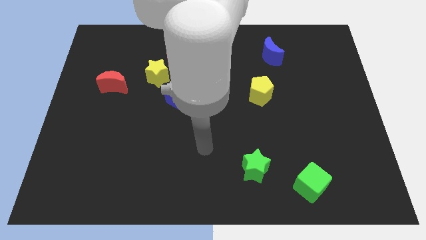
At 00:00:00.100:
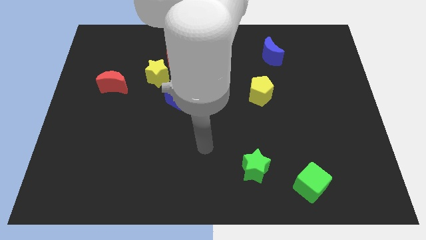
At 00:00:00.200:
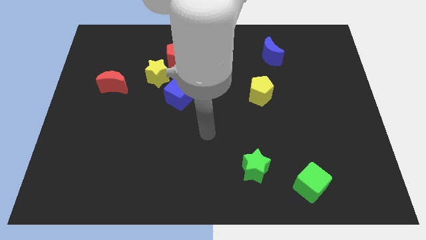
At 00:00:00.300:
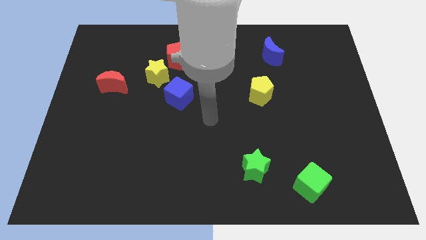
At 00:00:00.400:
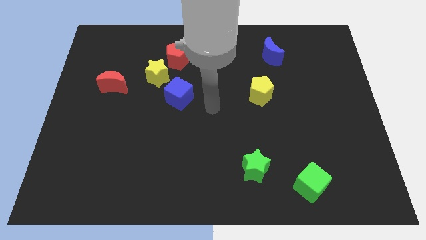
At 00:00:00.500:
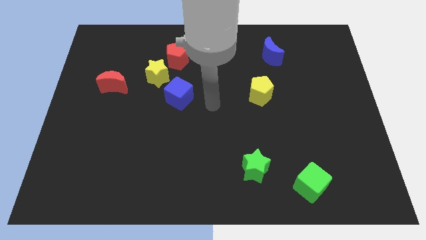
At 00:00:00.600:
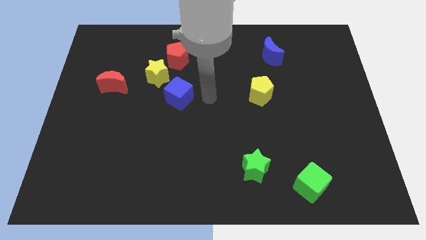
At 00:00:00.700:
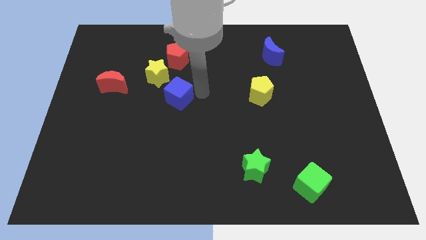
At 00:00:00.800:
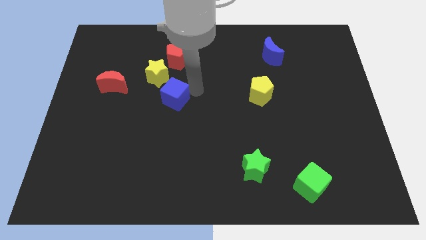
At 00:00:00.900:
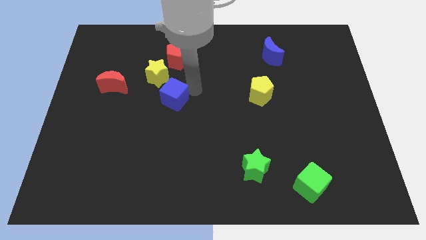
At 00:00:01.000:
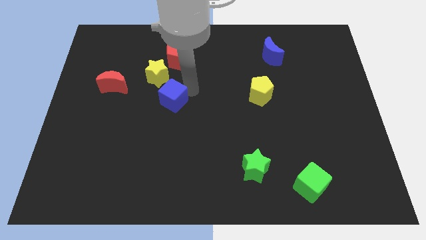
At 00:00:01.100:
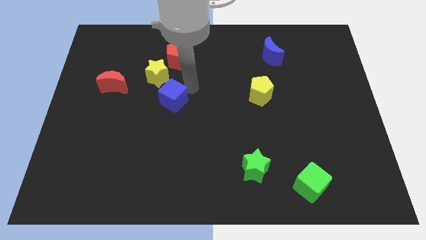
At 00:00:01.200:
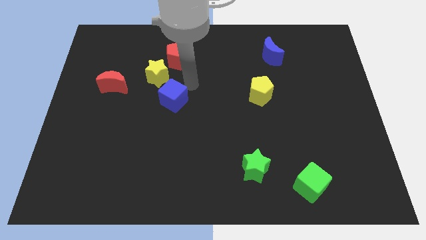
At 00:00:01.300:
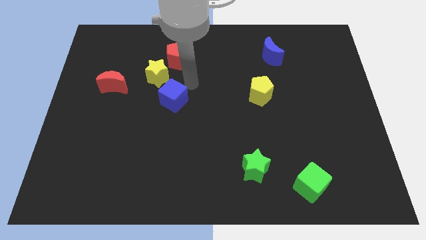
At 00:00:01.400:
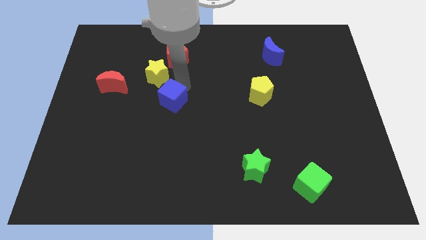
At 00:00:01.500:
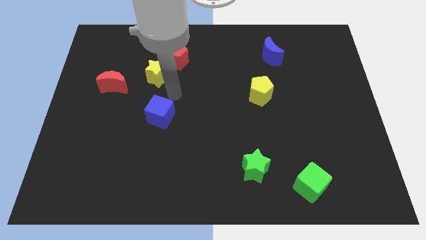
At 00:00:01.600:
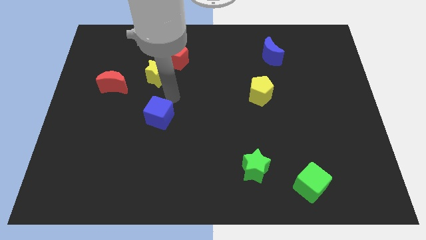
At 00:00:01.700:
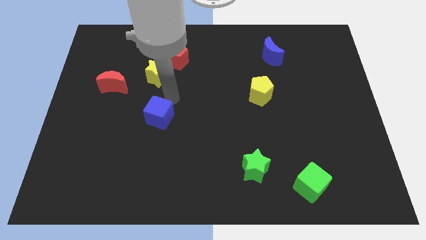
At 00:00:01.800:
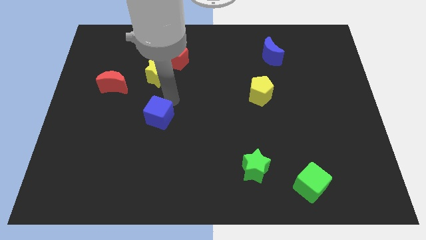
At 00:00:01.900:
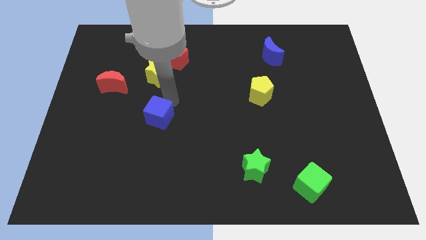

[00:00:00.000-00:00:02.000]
slightly push the blue cube

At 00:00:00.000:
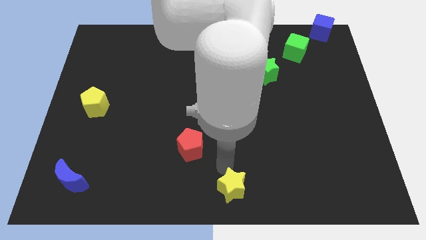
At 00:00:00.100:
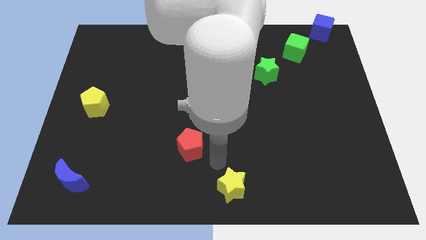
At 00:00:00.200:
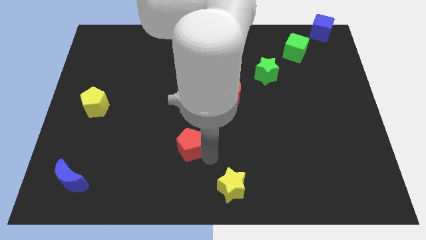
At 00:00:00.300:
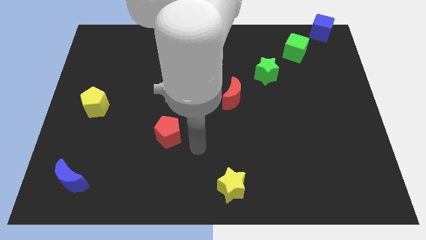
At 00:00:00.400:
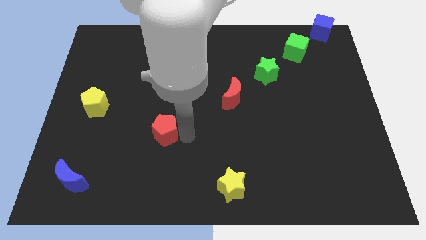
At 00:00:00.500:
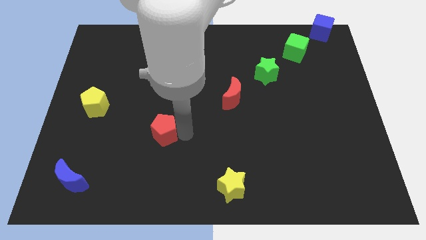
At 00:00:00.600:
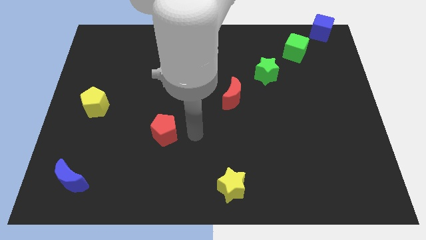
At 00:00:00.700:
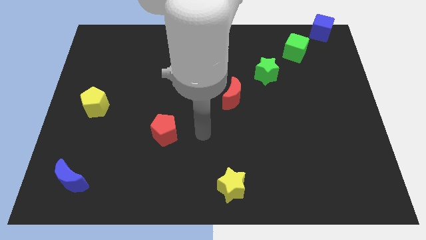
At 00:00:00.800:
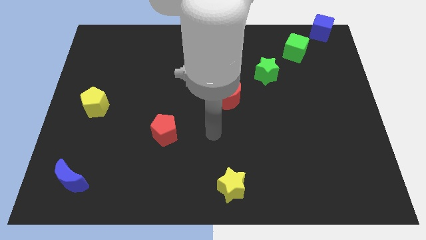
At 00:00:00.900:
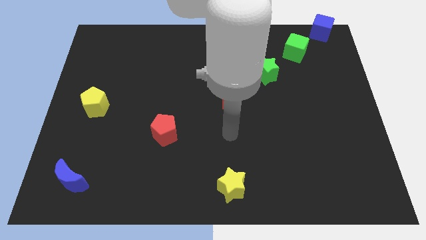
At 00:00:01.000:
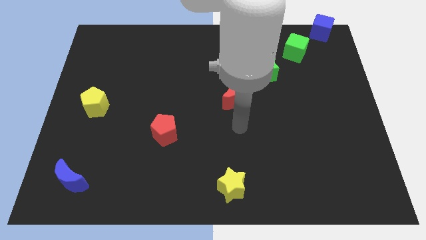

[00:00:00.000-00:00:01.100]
place the red pentagon diagonal to the blue crescent

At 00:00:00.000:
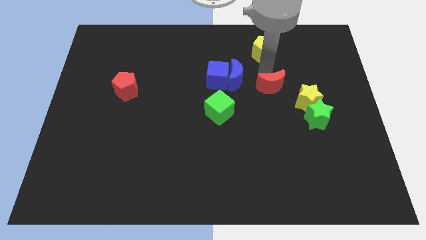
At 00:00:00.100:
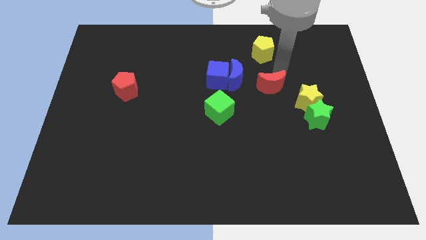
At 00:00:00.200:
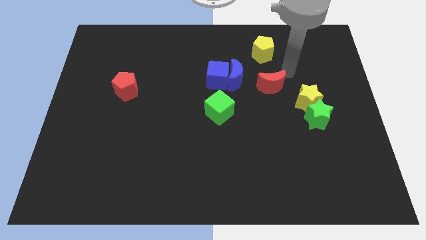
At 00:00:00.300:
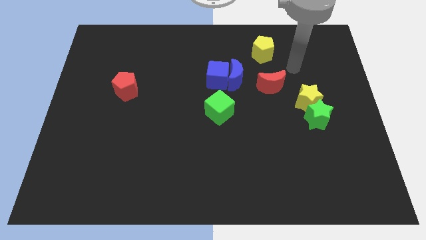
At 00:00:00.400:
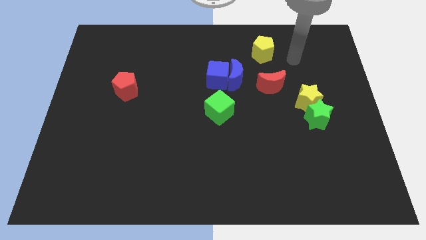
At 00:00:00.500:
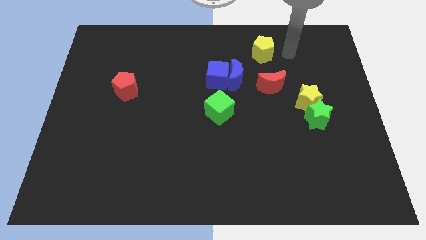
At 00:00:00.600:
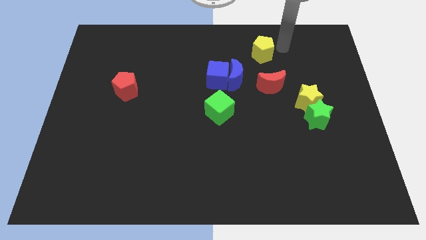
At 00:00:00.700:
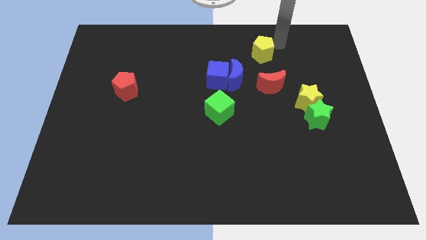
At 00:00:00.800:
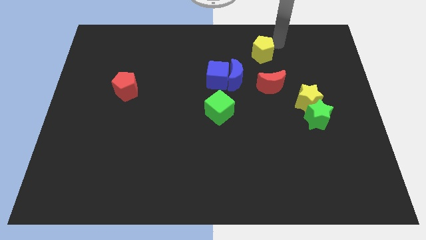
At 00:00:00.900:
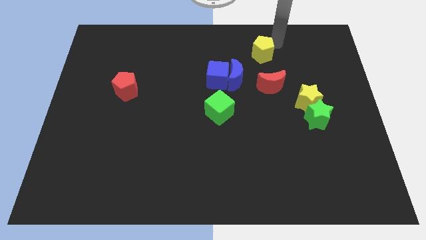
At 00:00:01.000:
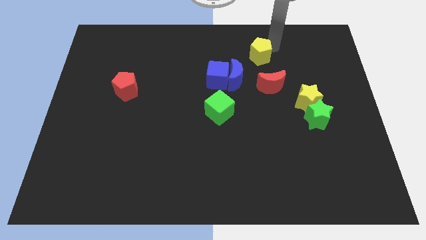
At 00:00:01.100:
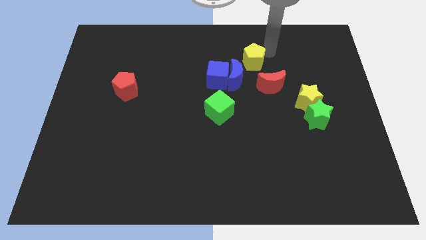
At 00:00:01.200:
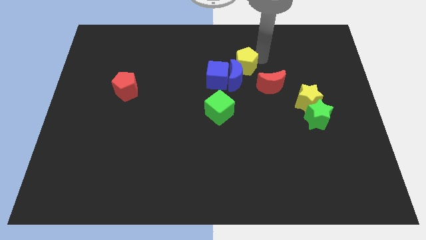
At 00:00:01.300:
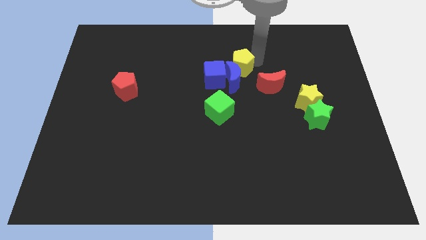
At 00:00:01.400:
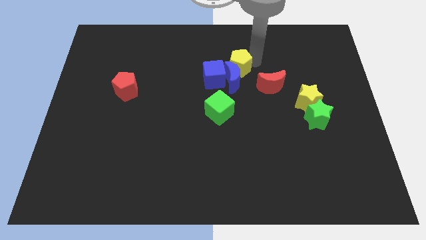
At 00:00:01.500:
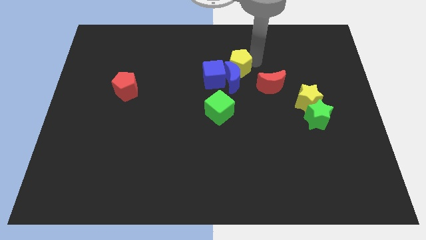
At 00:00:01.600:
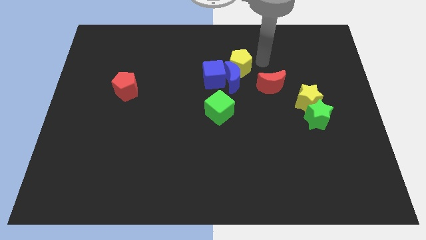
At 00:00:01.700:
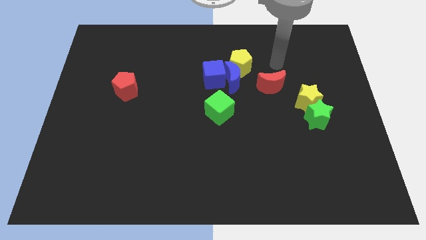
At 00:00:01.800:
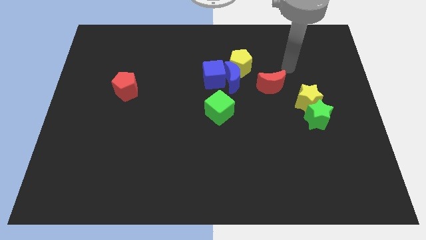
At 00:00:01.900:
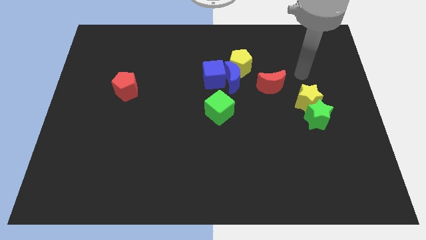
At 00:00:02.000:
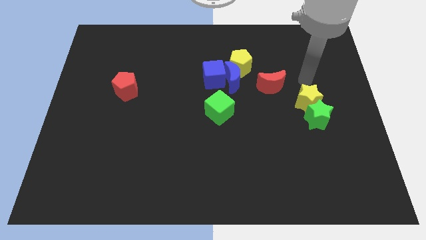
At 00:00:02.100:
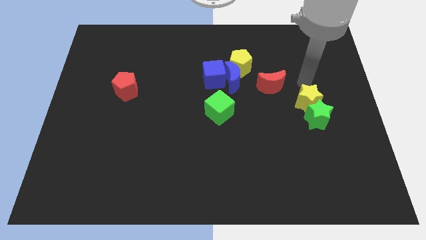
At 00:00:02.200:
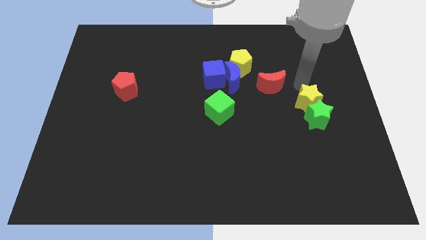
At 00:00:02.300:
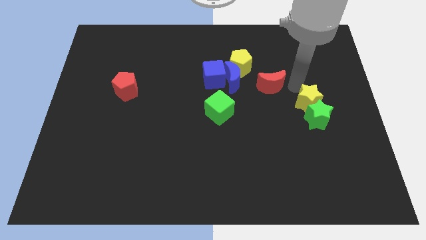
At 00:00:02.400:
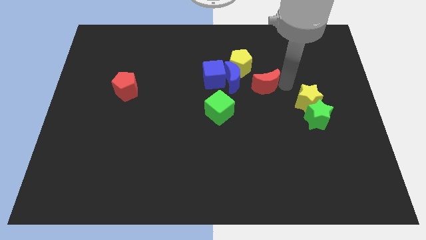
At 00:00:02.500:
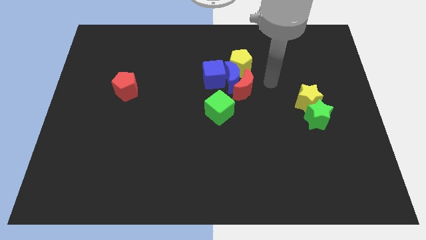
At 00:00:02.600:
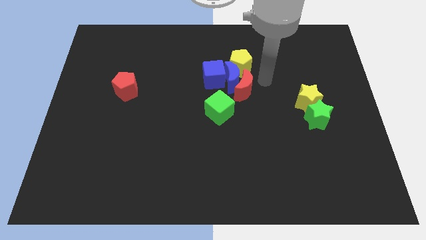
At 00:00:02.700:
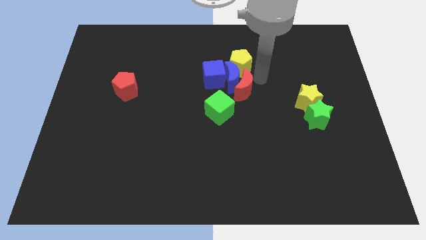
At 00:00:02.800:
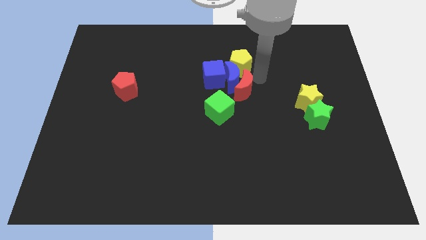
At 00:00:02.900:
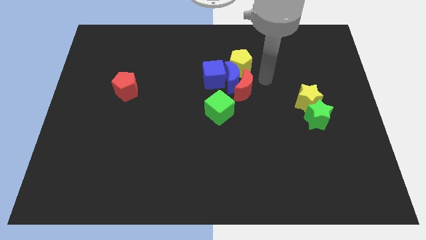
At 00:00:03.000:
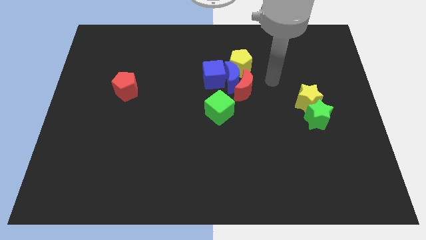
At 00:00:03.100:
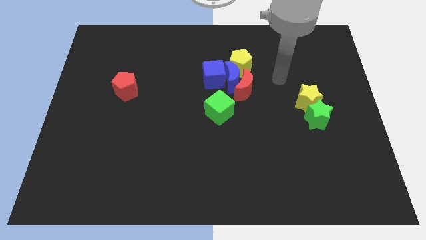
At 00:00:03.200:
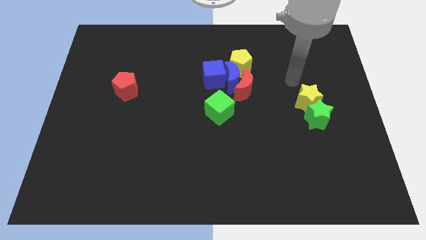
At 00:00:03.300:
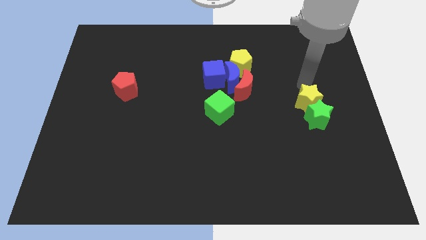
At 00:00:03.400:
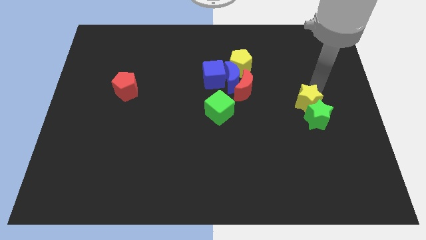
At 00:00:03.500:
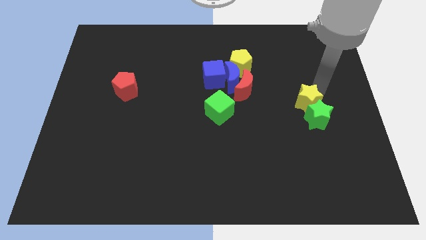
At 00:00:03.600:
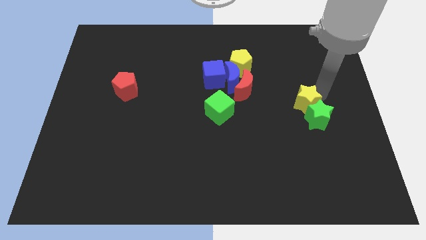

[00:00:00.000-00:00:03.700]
push red crescent into blue crescent

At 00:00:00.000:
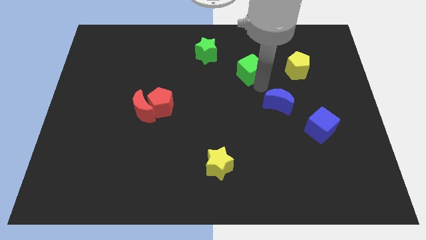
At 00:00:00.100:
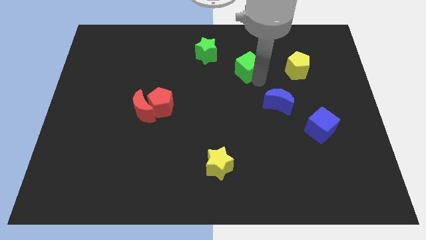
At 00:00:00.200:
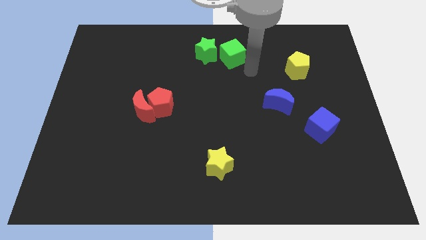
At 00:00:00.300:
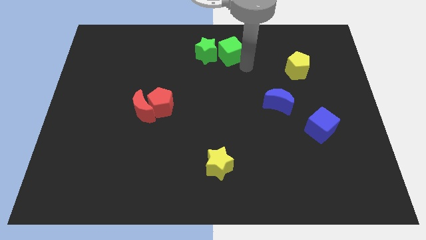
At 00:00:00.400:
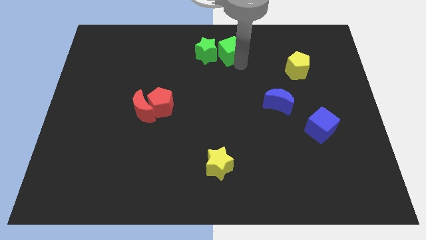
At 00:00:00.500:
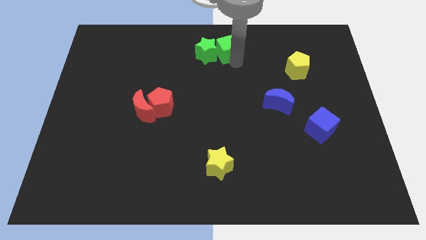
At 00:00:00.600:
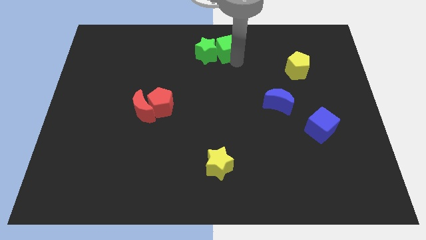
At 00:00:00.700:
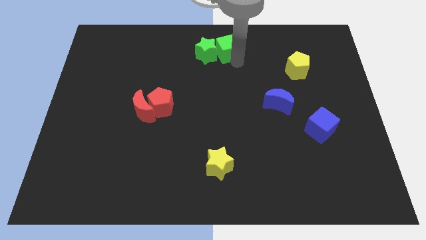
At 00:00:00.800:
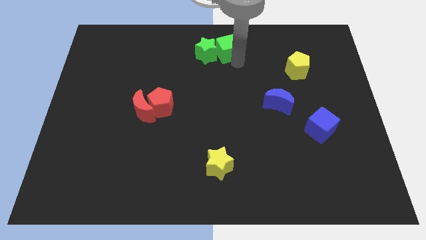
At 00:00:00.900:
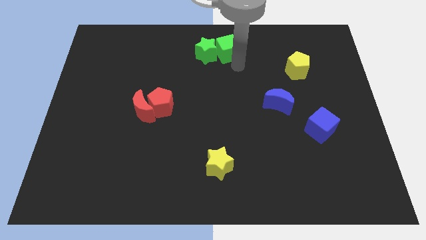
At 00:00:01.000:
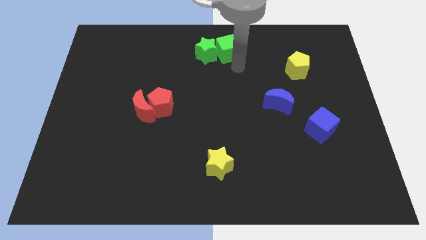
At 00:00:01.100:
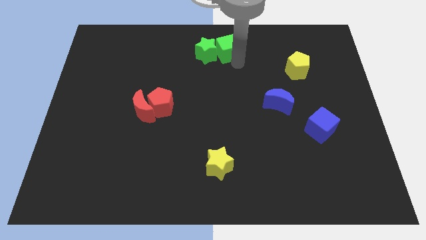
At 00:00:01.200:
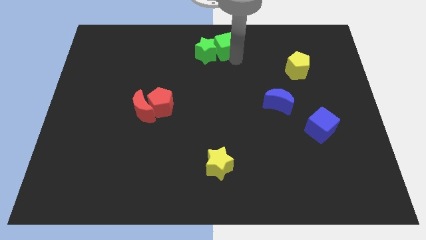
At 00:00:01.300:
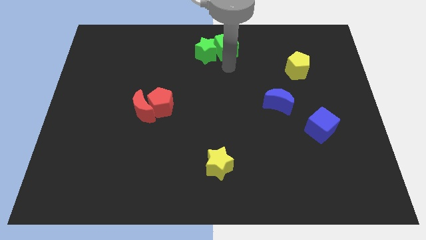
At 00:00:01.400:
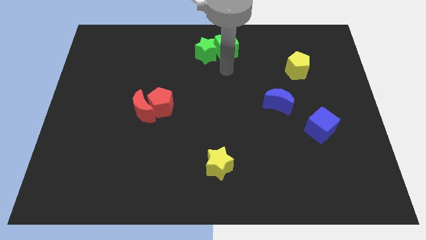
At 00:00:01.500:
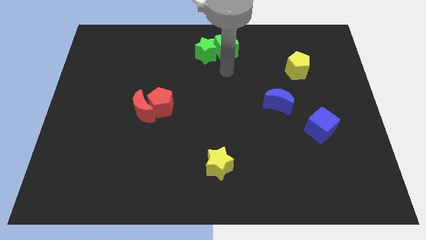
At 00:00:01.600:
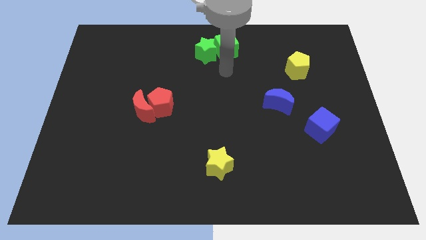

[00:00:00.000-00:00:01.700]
place the green cube to the right side of the green star

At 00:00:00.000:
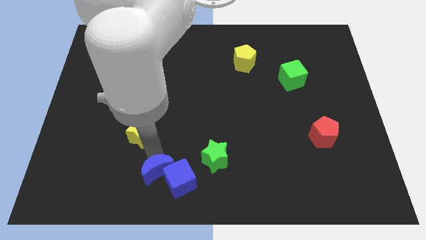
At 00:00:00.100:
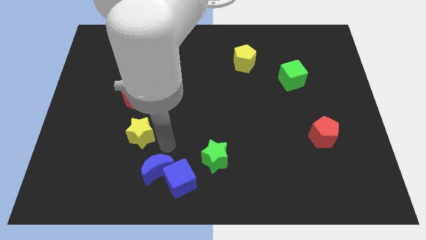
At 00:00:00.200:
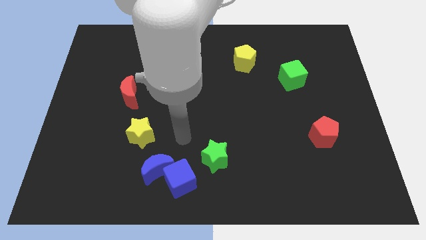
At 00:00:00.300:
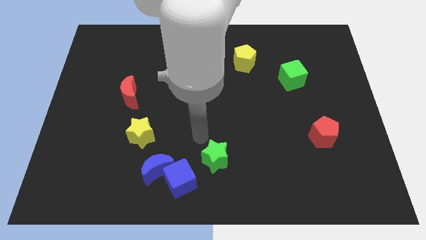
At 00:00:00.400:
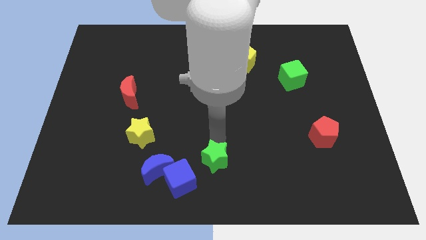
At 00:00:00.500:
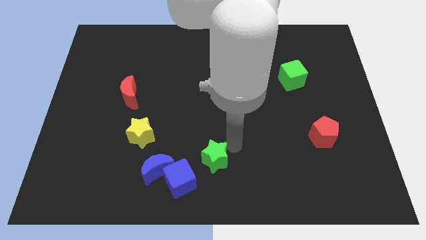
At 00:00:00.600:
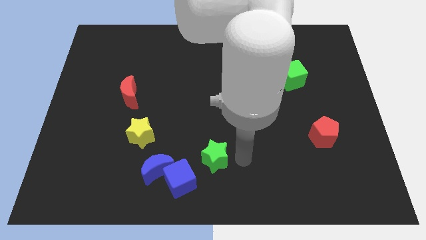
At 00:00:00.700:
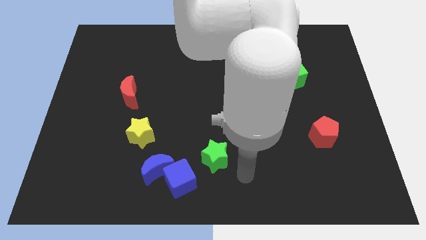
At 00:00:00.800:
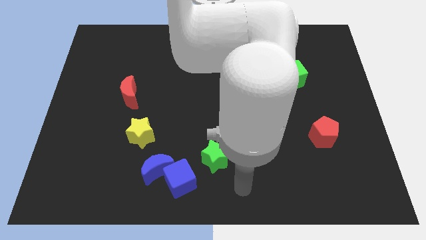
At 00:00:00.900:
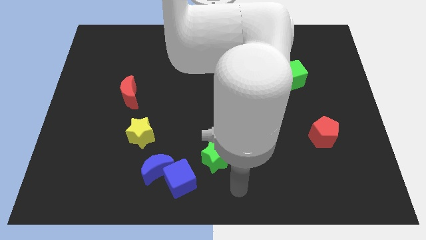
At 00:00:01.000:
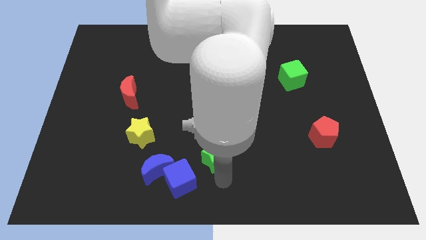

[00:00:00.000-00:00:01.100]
point your arm at the bottom of green star
